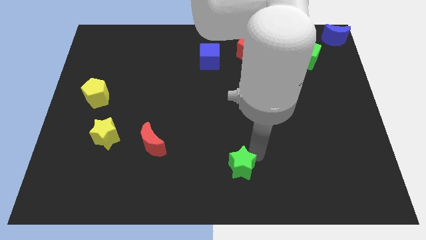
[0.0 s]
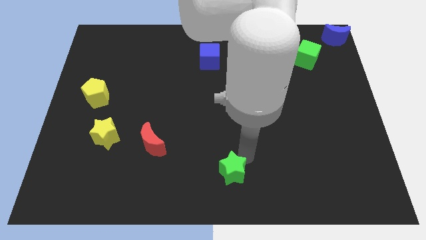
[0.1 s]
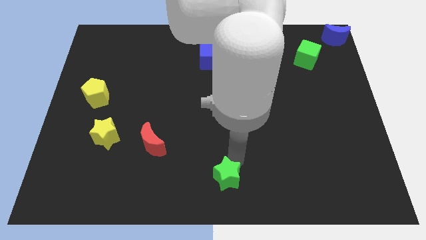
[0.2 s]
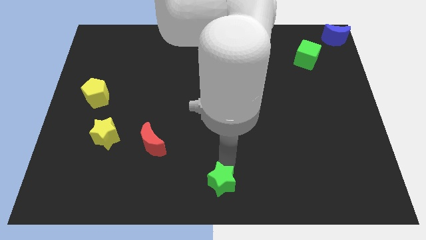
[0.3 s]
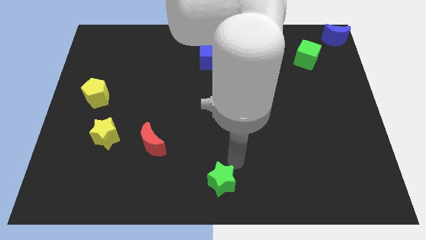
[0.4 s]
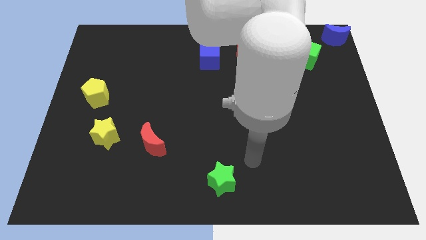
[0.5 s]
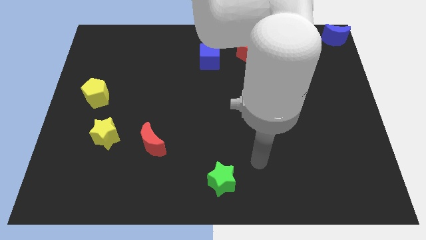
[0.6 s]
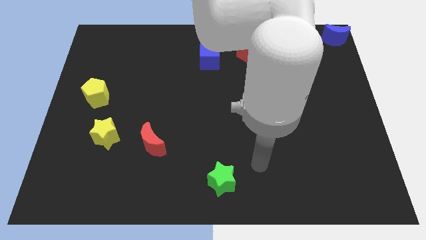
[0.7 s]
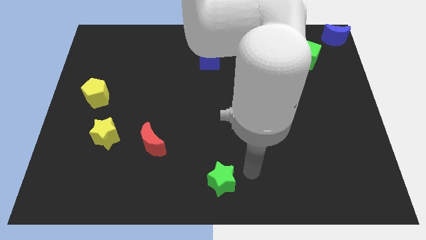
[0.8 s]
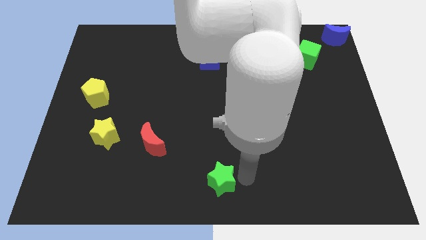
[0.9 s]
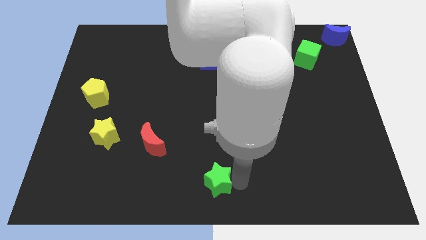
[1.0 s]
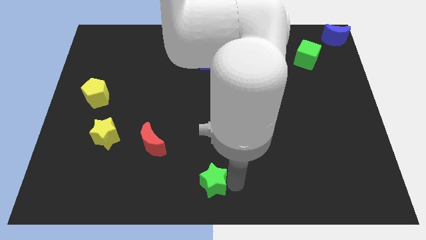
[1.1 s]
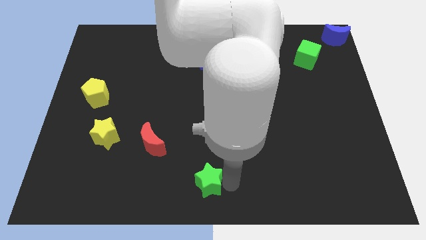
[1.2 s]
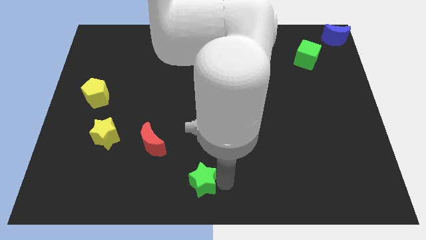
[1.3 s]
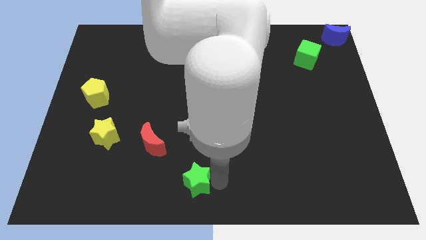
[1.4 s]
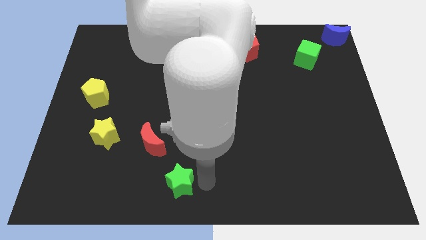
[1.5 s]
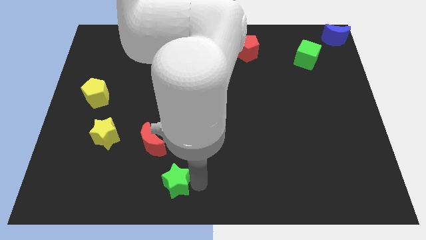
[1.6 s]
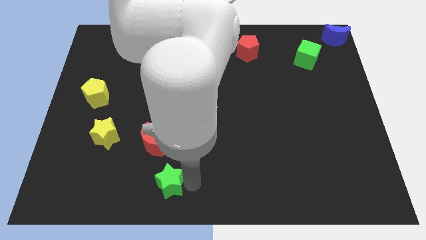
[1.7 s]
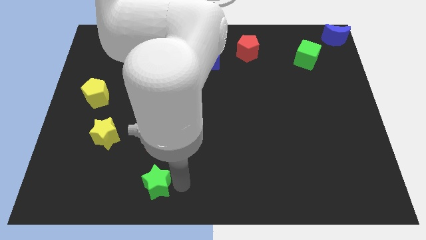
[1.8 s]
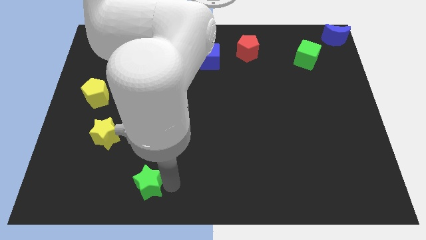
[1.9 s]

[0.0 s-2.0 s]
place the green star to the bottom of the red moon

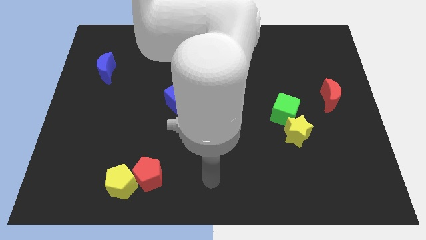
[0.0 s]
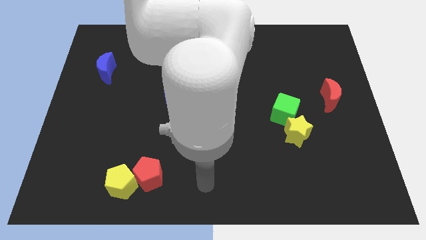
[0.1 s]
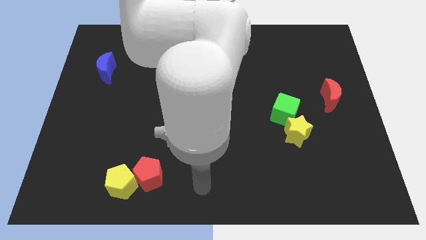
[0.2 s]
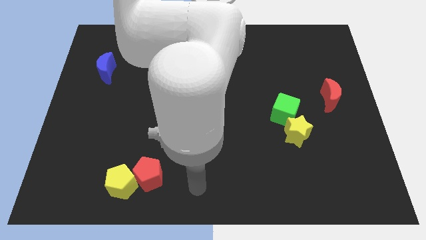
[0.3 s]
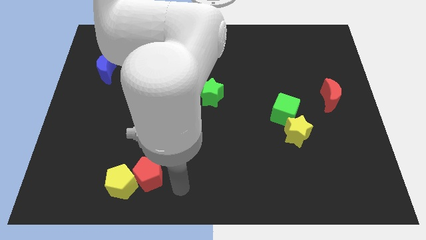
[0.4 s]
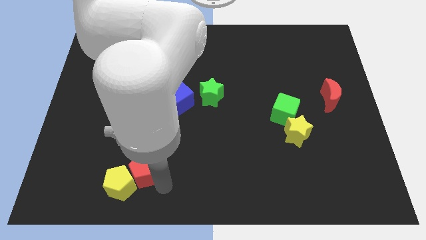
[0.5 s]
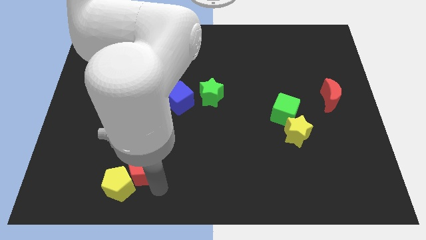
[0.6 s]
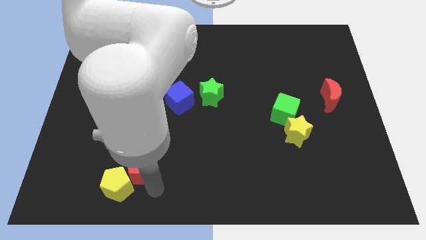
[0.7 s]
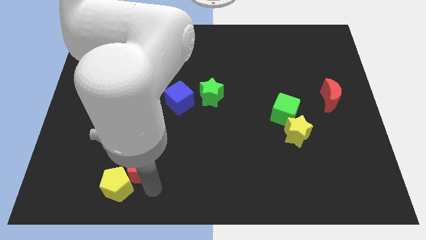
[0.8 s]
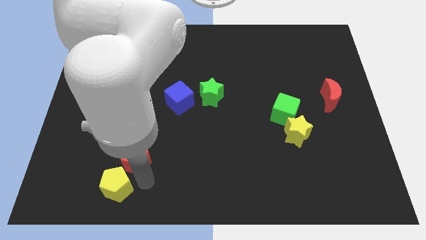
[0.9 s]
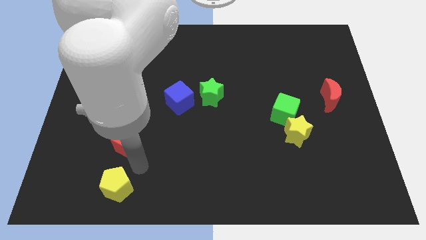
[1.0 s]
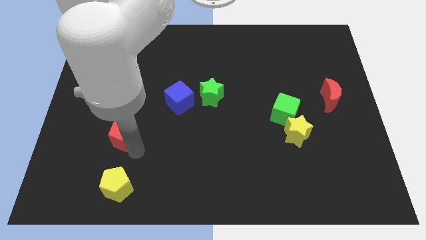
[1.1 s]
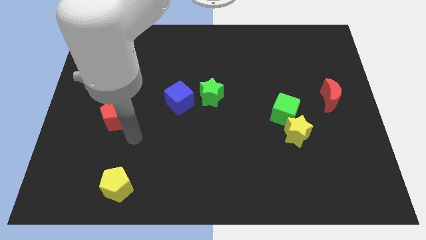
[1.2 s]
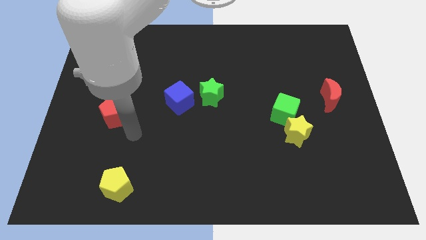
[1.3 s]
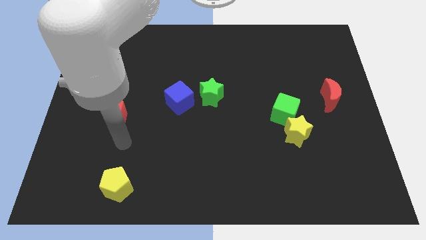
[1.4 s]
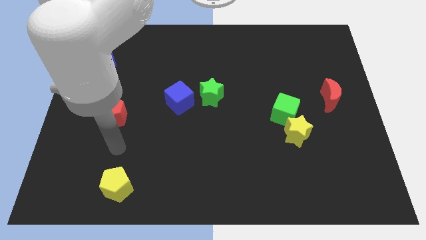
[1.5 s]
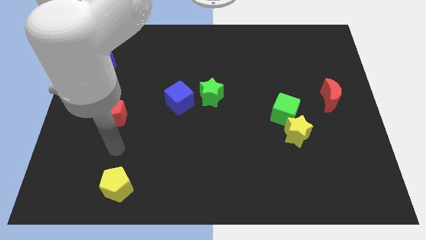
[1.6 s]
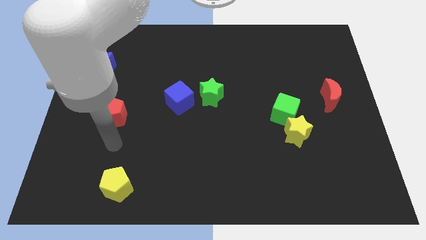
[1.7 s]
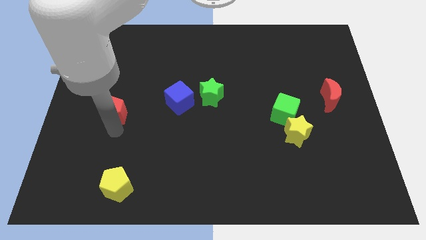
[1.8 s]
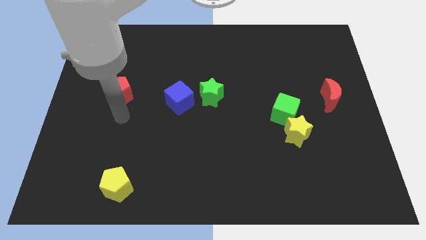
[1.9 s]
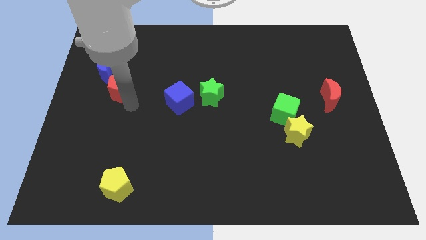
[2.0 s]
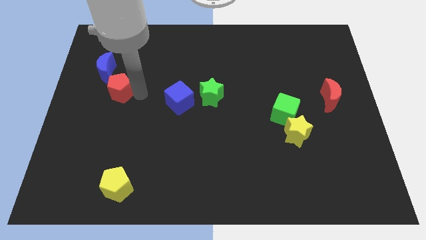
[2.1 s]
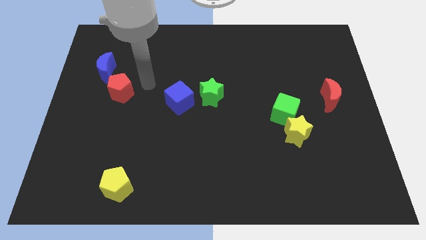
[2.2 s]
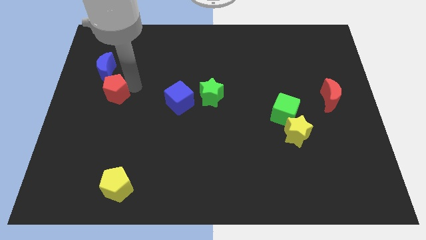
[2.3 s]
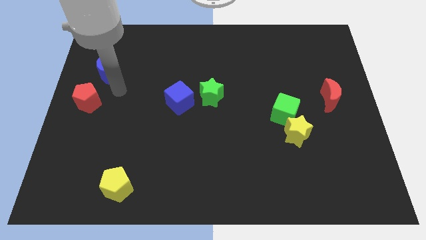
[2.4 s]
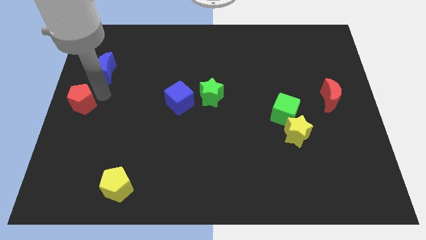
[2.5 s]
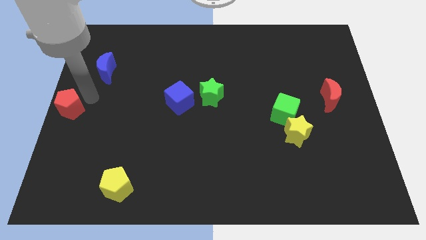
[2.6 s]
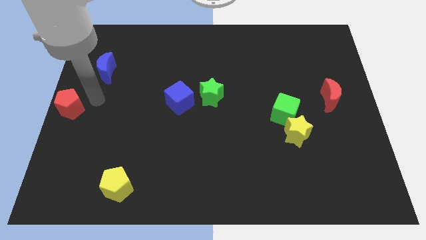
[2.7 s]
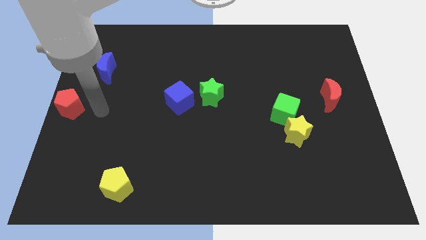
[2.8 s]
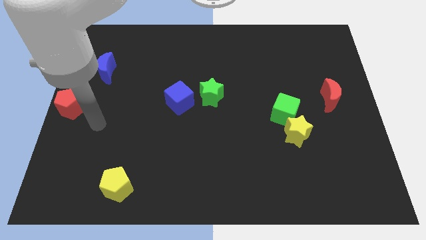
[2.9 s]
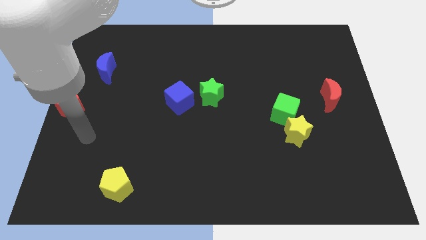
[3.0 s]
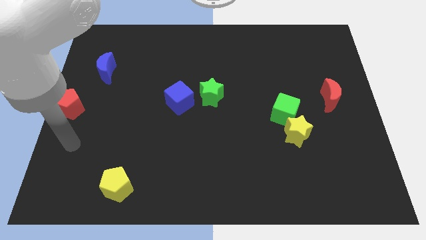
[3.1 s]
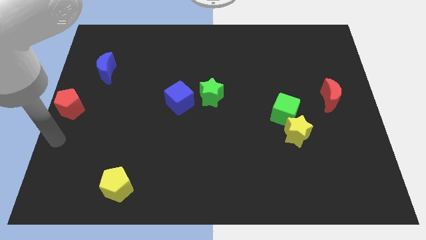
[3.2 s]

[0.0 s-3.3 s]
put the red pentagon to the center left side of the board

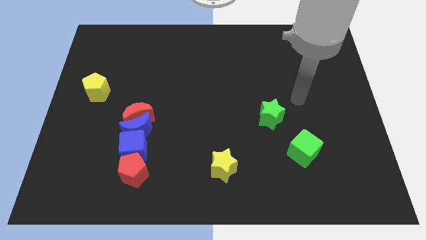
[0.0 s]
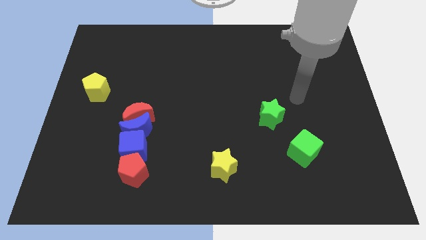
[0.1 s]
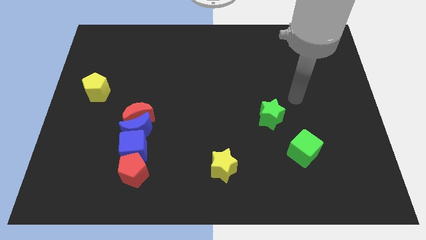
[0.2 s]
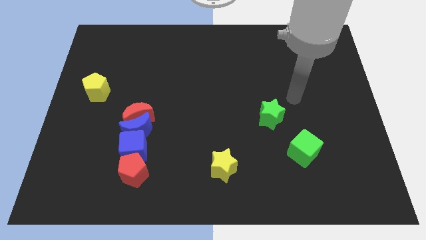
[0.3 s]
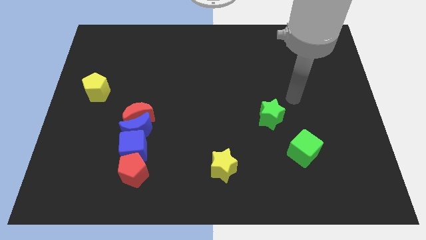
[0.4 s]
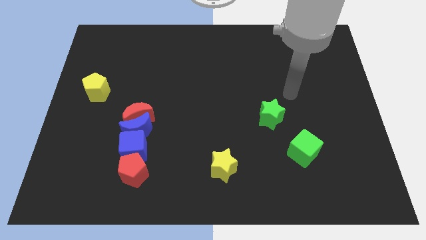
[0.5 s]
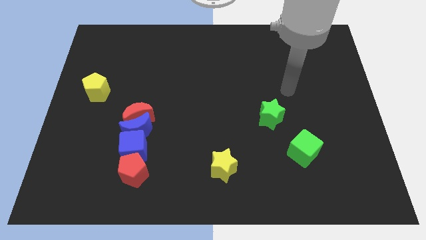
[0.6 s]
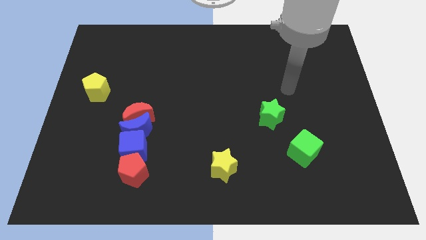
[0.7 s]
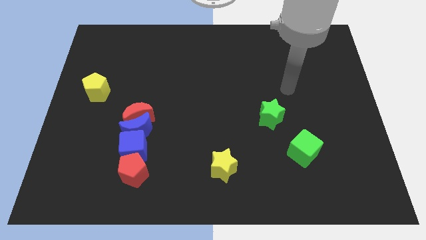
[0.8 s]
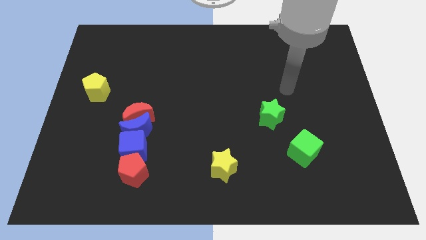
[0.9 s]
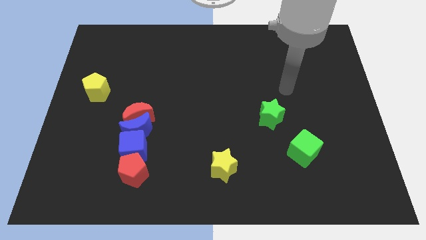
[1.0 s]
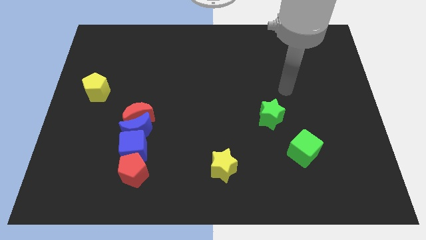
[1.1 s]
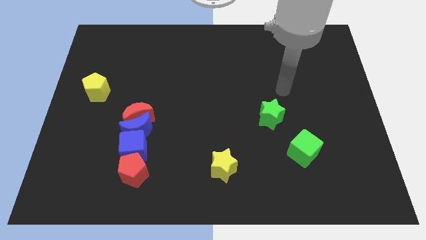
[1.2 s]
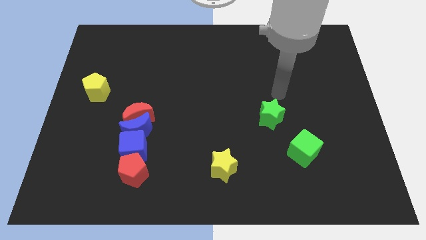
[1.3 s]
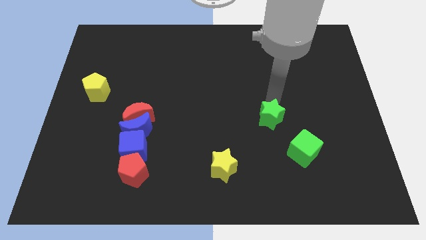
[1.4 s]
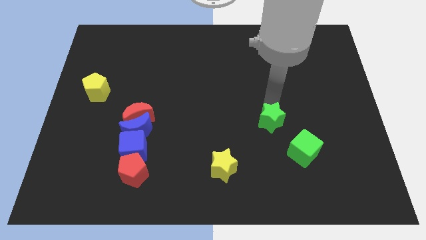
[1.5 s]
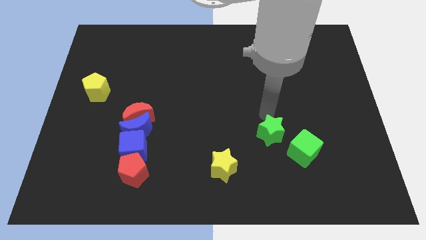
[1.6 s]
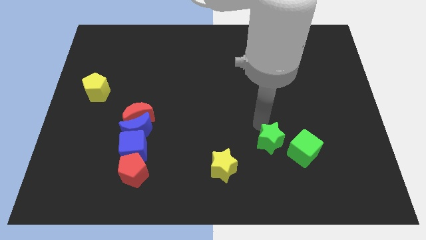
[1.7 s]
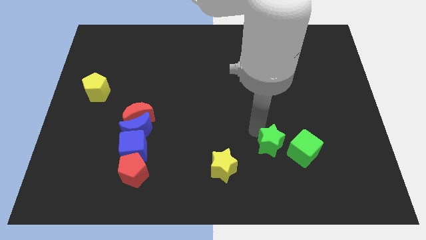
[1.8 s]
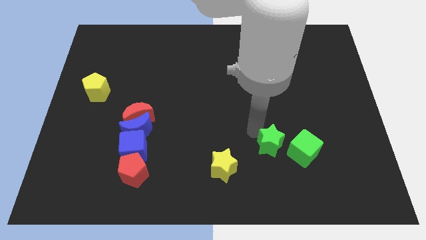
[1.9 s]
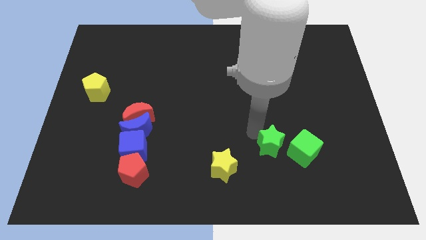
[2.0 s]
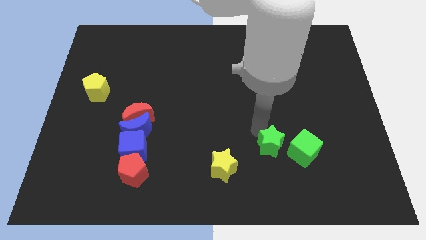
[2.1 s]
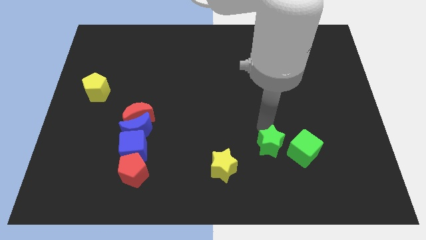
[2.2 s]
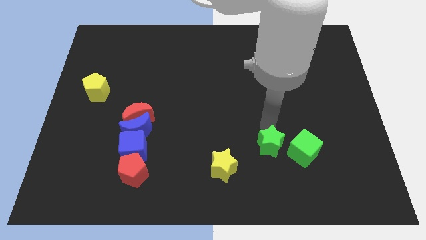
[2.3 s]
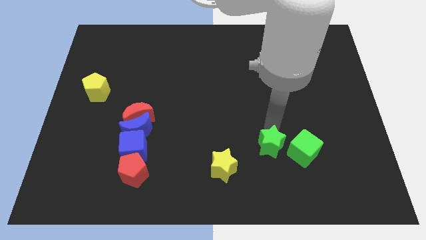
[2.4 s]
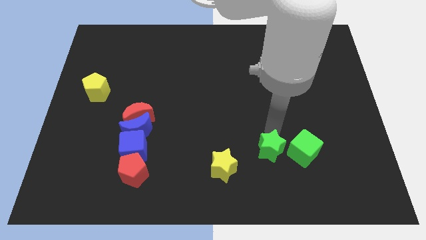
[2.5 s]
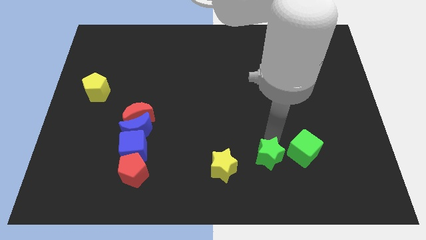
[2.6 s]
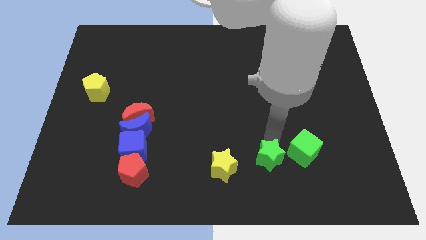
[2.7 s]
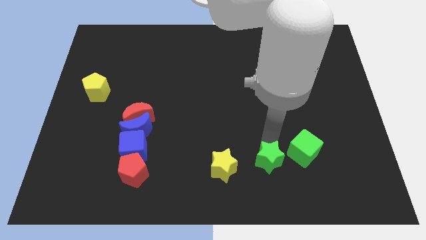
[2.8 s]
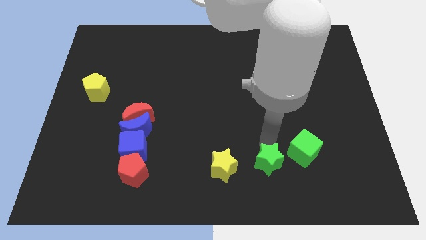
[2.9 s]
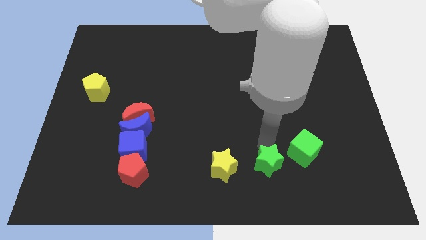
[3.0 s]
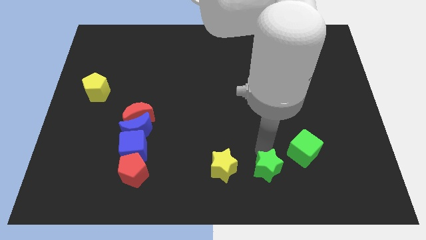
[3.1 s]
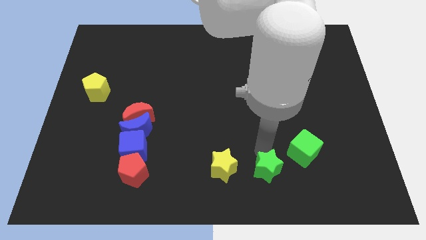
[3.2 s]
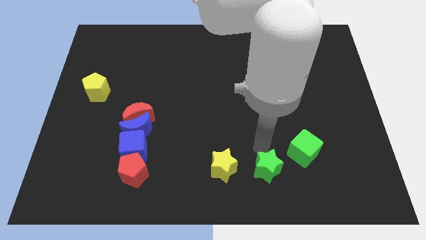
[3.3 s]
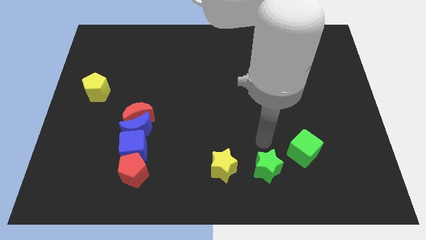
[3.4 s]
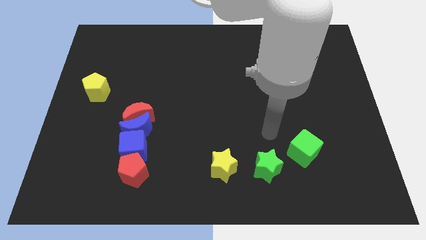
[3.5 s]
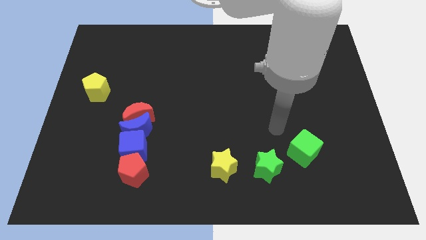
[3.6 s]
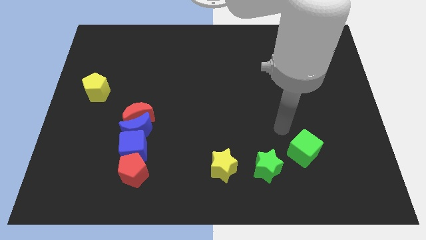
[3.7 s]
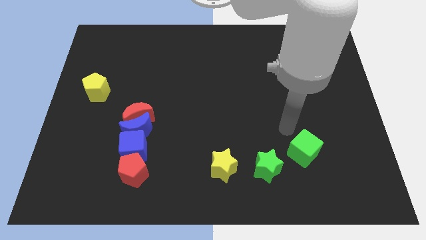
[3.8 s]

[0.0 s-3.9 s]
push the green star to the right side of the yellow star
